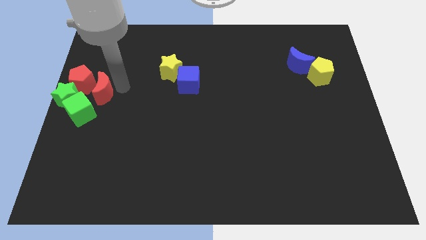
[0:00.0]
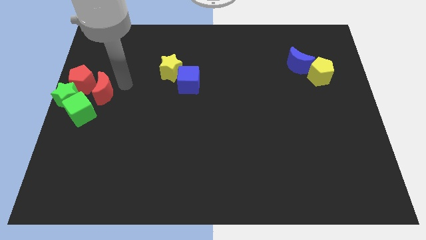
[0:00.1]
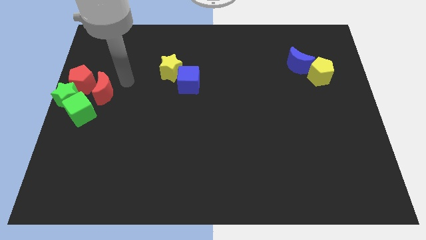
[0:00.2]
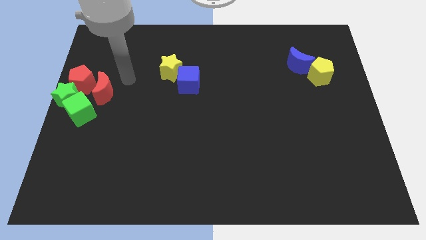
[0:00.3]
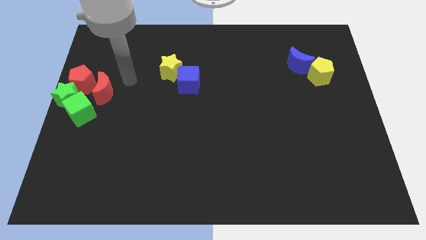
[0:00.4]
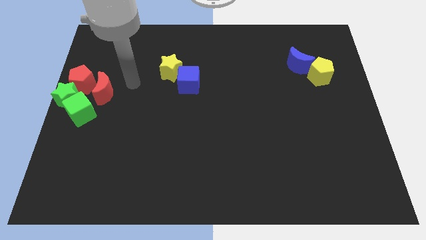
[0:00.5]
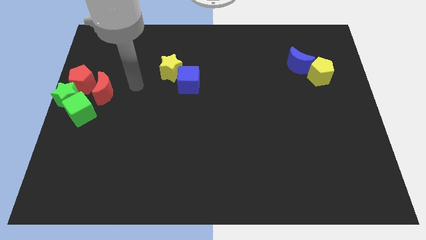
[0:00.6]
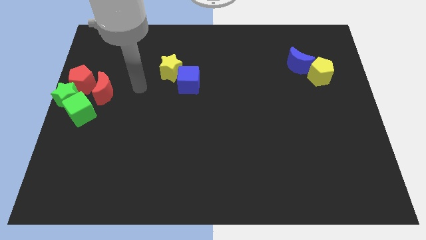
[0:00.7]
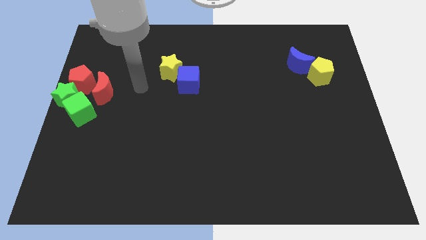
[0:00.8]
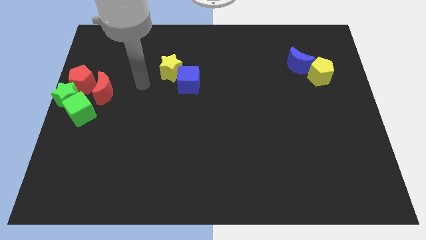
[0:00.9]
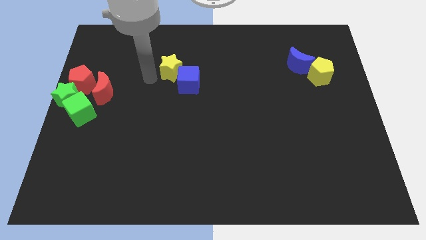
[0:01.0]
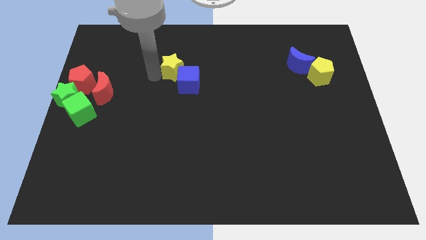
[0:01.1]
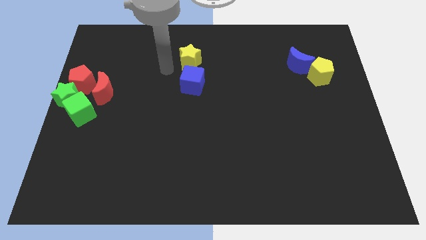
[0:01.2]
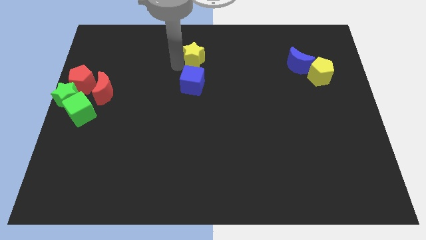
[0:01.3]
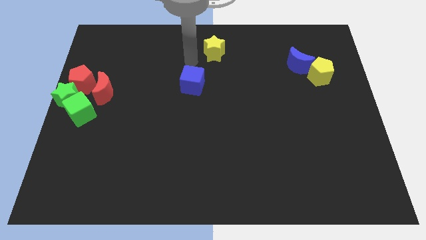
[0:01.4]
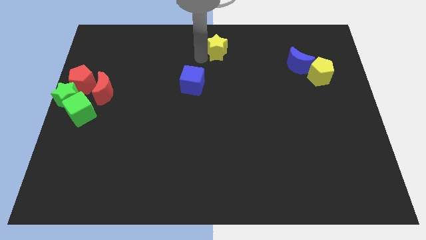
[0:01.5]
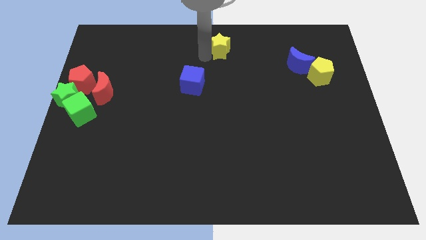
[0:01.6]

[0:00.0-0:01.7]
separate the yellow star and the blue cube

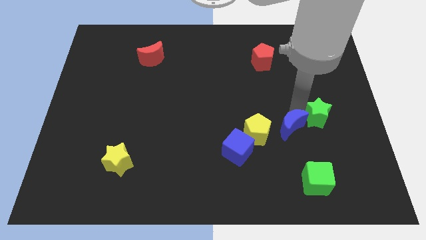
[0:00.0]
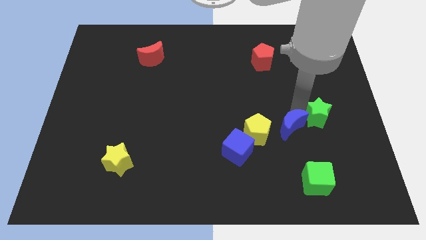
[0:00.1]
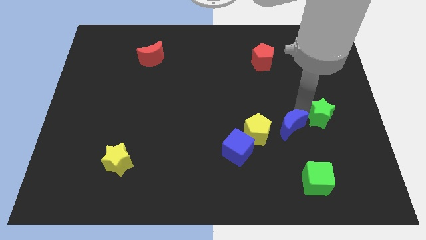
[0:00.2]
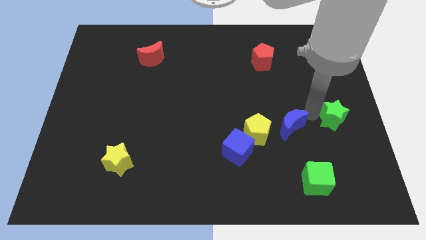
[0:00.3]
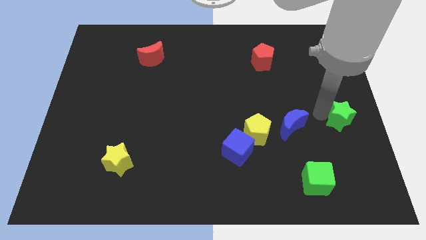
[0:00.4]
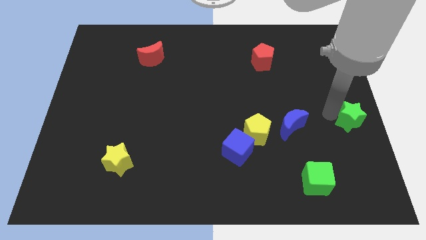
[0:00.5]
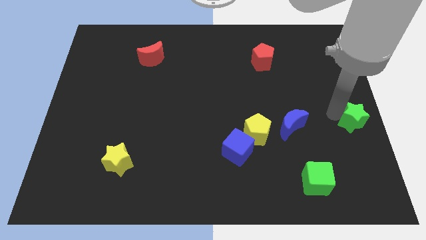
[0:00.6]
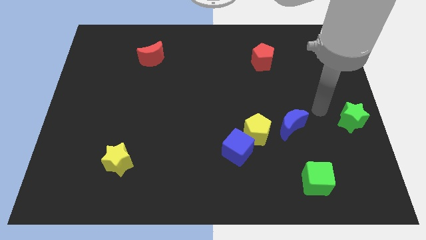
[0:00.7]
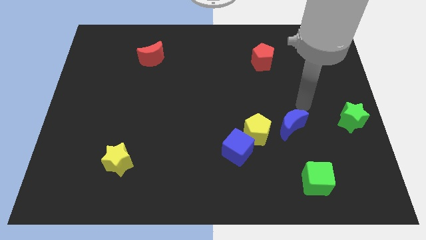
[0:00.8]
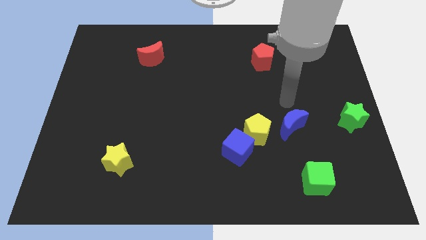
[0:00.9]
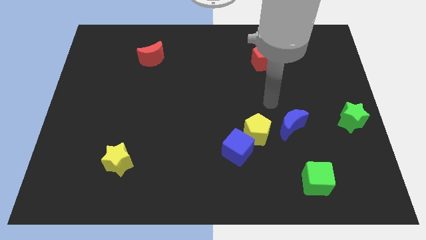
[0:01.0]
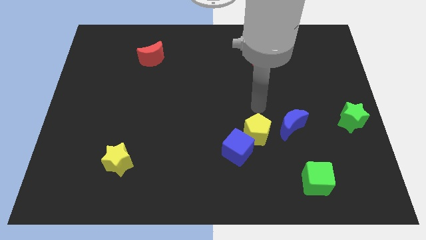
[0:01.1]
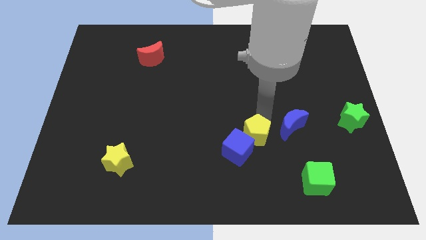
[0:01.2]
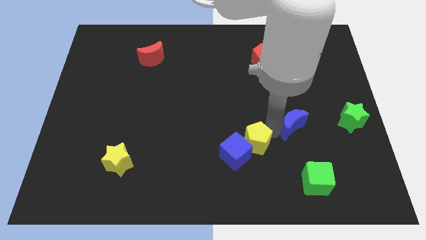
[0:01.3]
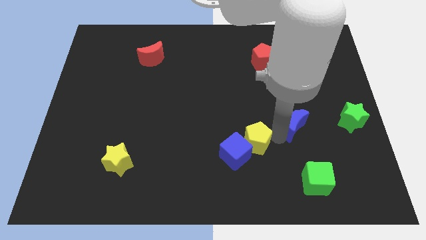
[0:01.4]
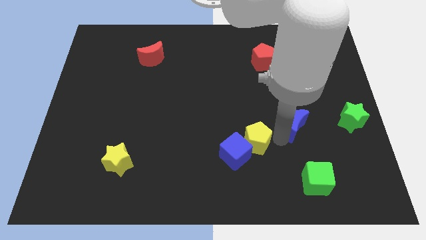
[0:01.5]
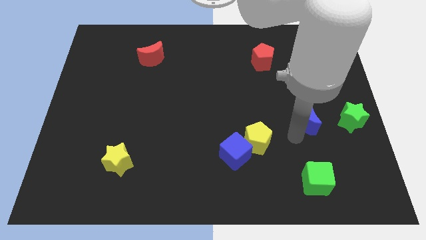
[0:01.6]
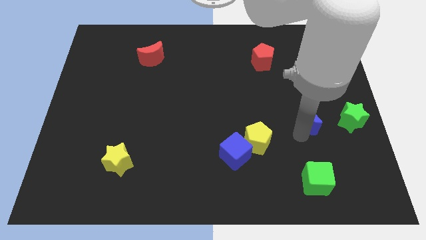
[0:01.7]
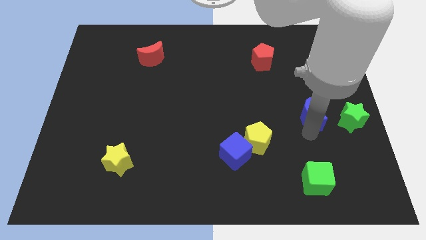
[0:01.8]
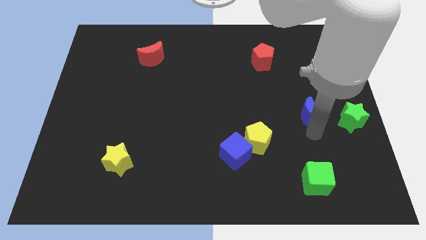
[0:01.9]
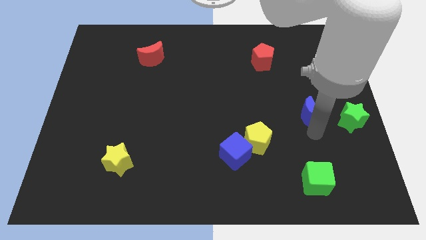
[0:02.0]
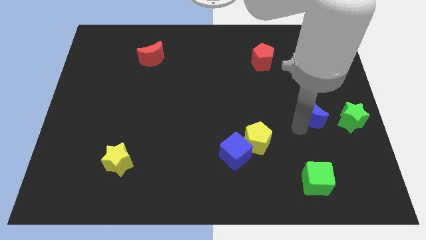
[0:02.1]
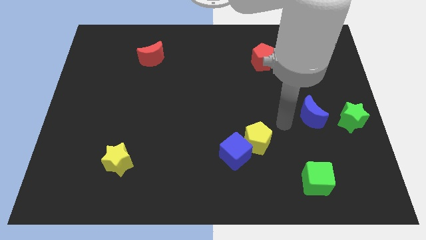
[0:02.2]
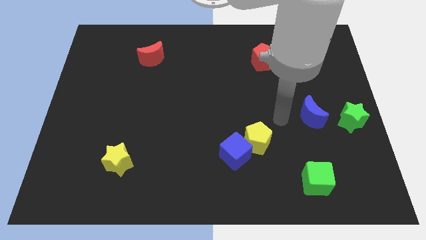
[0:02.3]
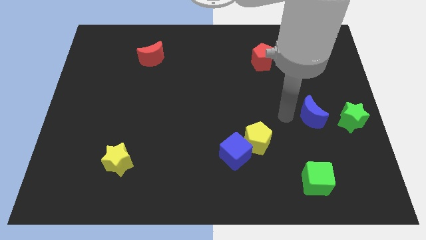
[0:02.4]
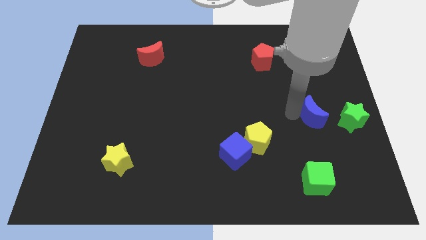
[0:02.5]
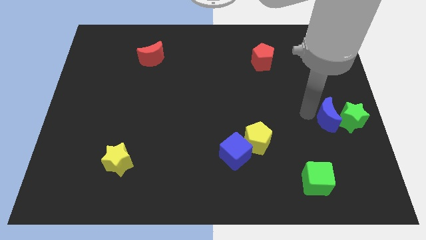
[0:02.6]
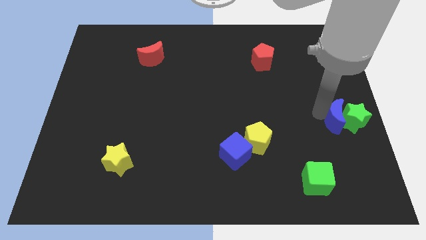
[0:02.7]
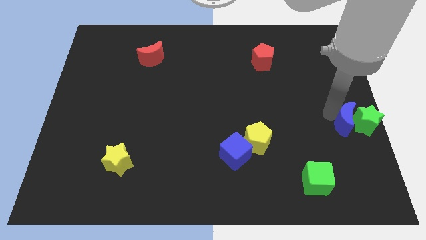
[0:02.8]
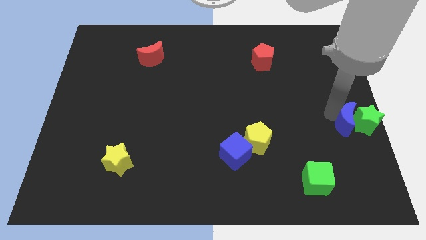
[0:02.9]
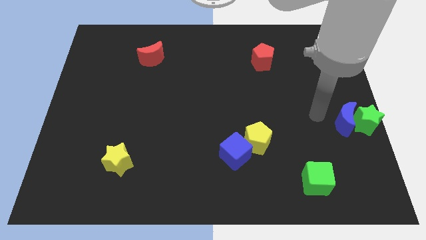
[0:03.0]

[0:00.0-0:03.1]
push blue crescent towards green star

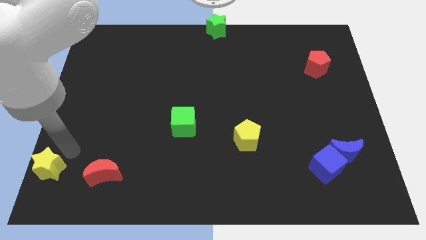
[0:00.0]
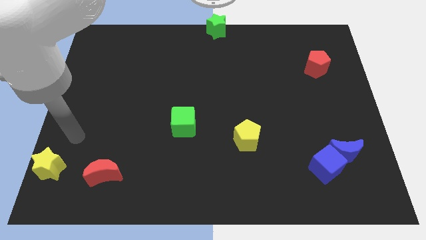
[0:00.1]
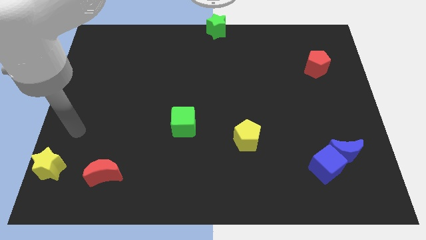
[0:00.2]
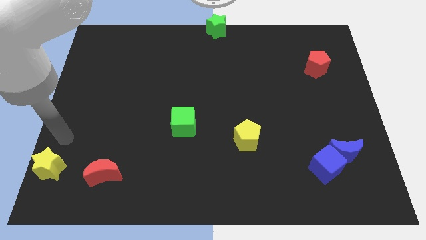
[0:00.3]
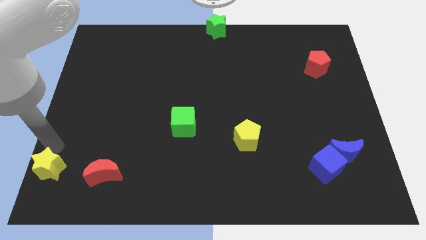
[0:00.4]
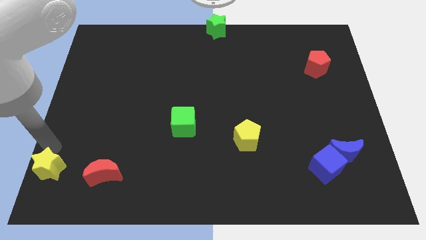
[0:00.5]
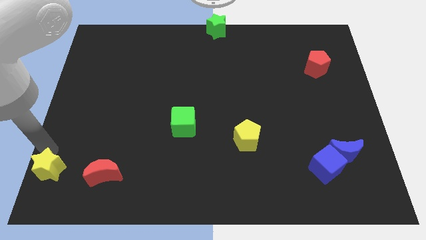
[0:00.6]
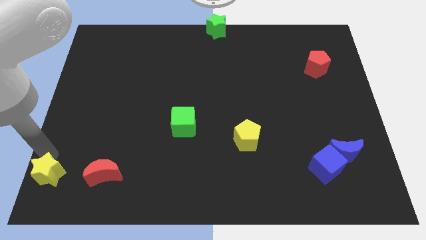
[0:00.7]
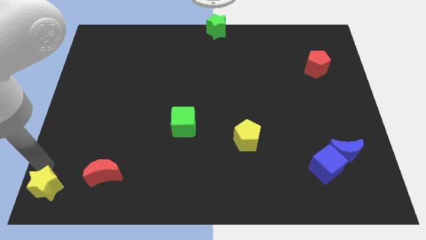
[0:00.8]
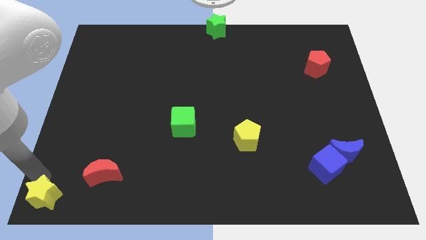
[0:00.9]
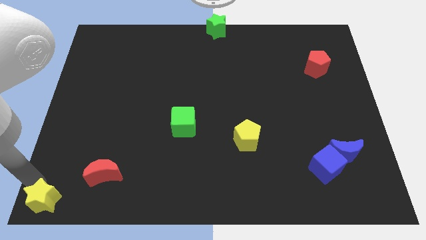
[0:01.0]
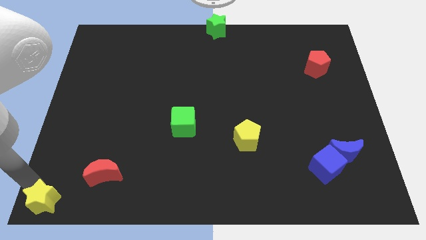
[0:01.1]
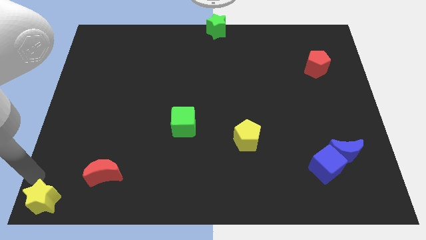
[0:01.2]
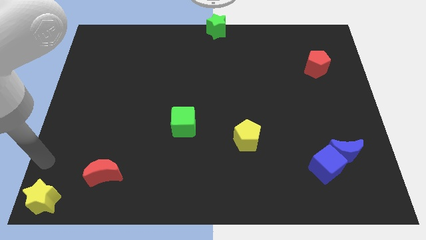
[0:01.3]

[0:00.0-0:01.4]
push the yellow star to the bottom left corner of the board

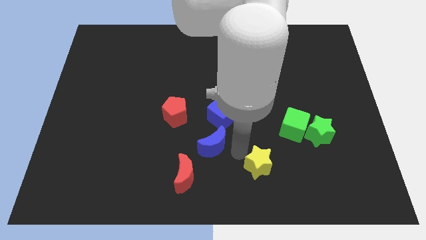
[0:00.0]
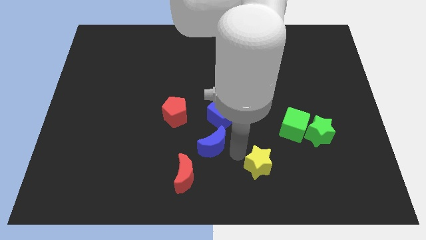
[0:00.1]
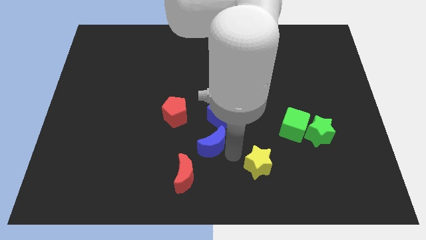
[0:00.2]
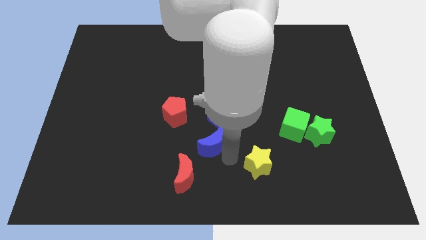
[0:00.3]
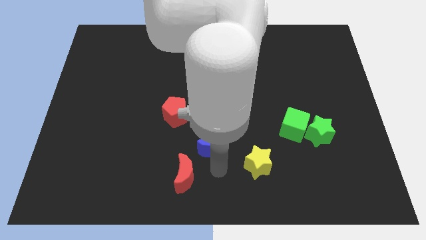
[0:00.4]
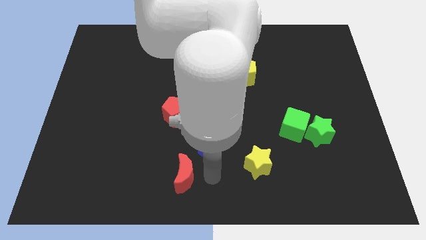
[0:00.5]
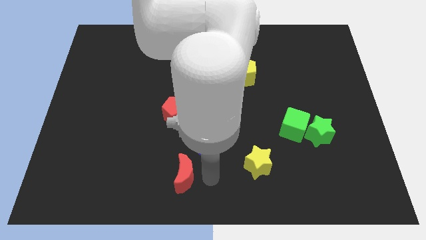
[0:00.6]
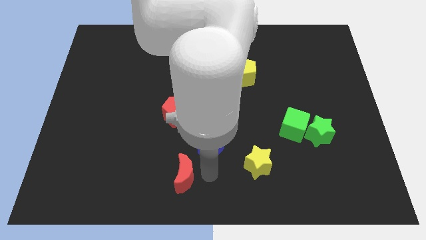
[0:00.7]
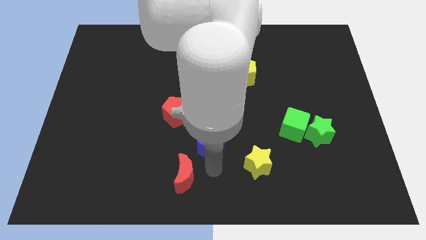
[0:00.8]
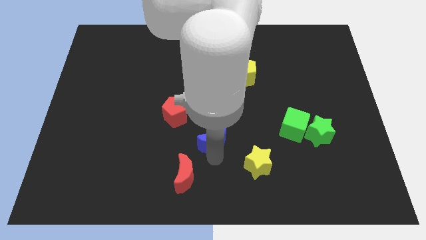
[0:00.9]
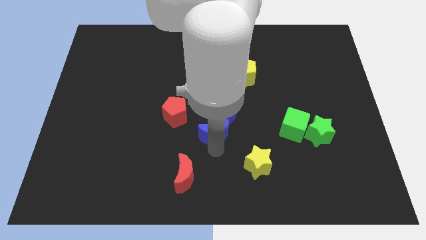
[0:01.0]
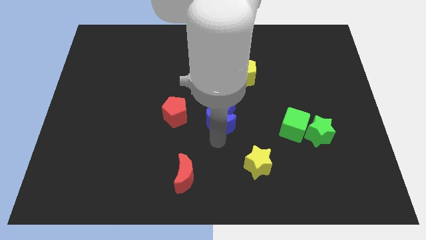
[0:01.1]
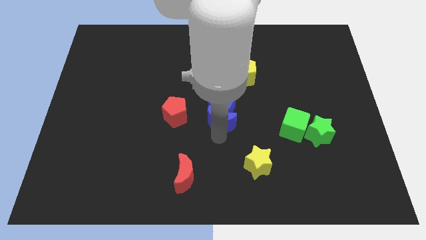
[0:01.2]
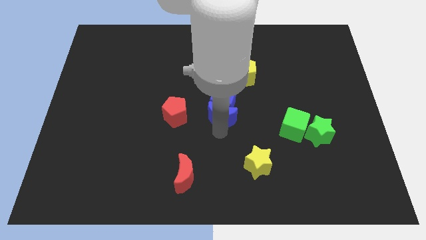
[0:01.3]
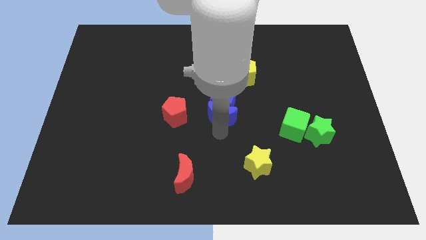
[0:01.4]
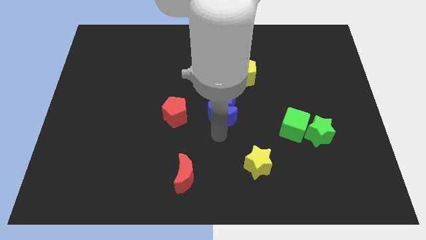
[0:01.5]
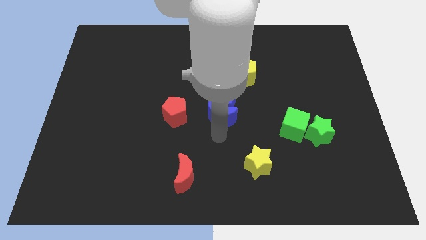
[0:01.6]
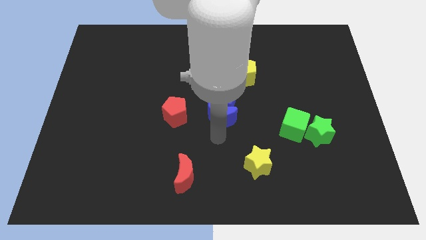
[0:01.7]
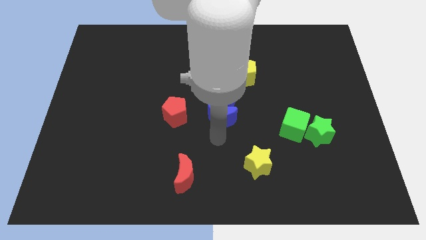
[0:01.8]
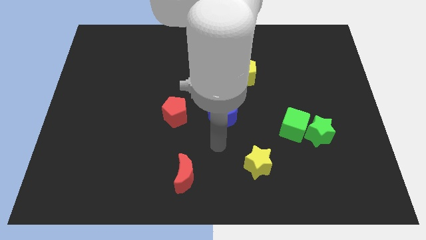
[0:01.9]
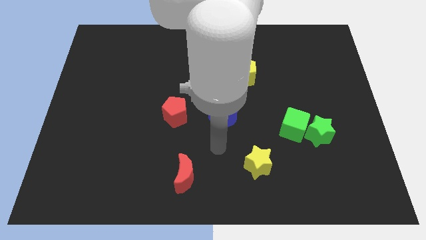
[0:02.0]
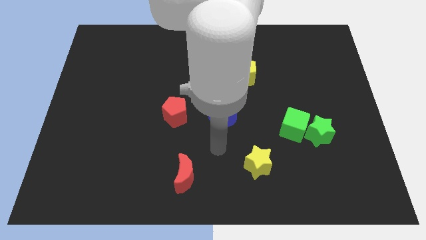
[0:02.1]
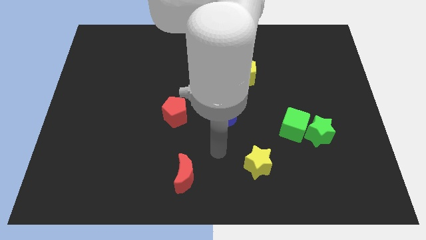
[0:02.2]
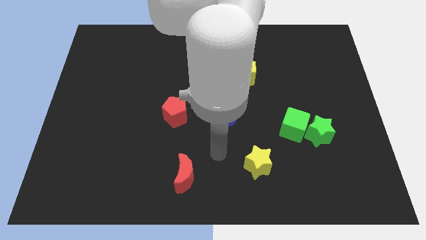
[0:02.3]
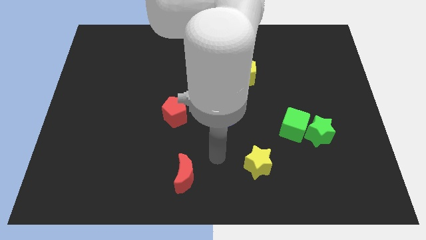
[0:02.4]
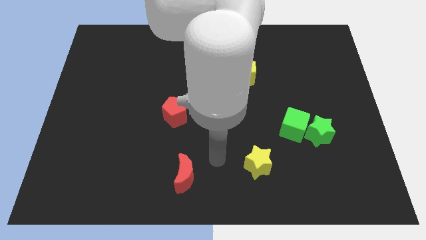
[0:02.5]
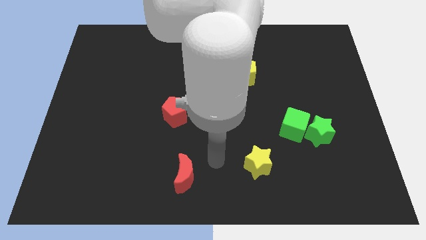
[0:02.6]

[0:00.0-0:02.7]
push the blue crescent into the blue cube
